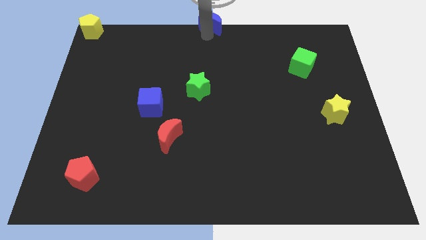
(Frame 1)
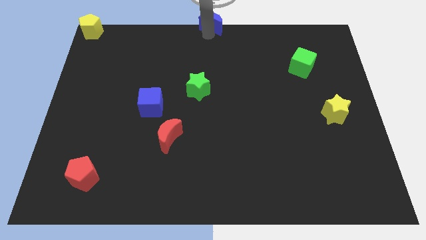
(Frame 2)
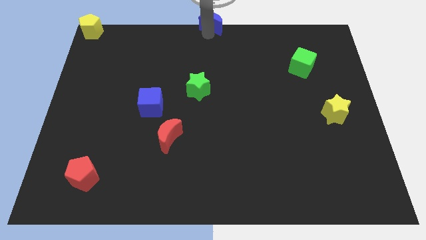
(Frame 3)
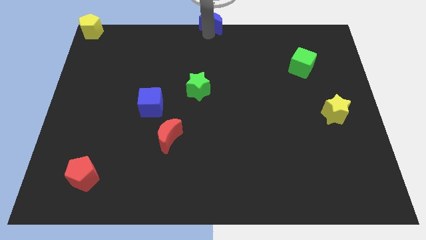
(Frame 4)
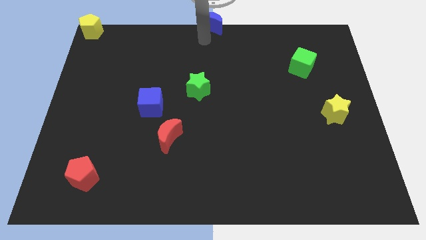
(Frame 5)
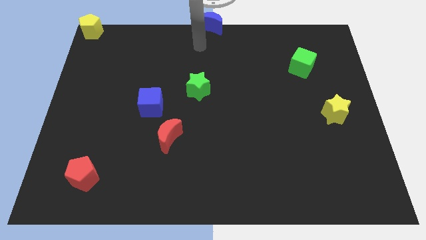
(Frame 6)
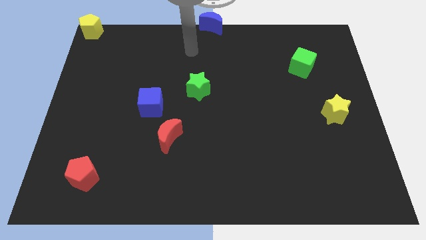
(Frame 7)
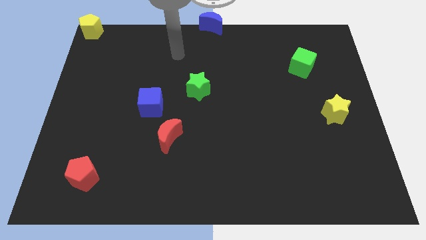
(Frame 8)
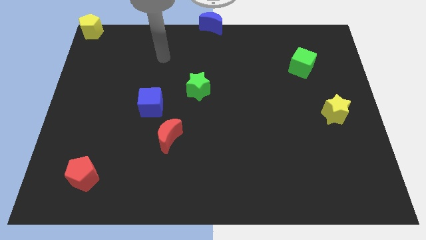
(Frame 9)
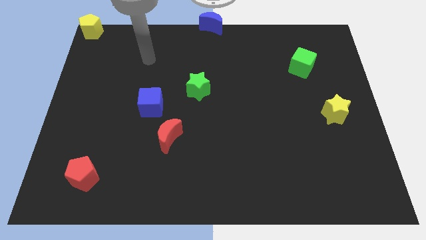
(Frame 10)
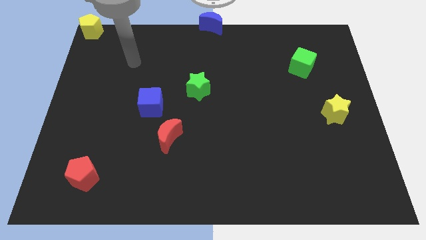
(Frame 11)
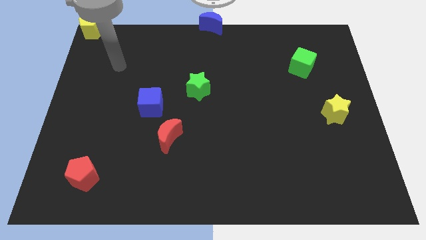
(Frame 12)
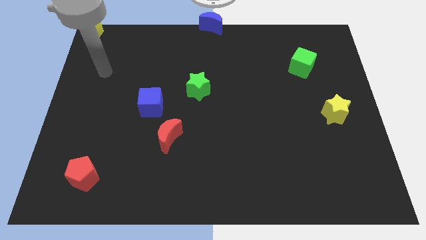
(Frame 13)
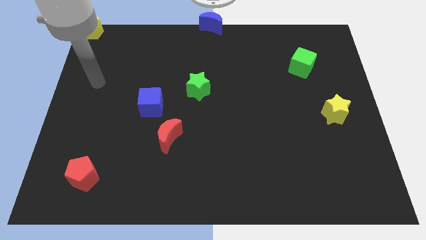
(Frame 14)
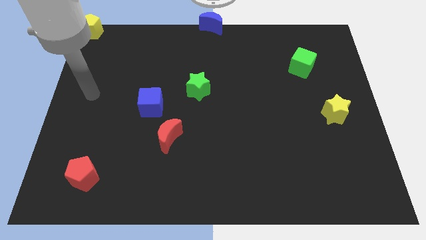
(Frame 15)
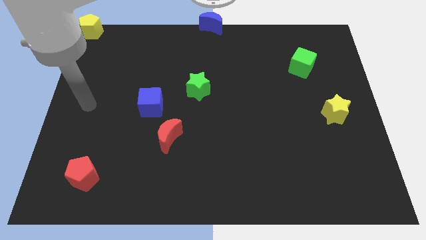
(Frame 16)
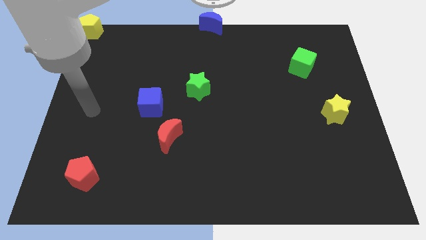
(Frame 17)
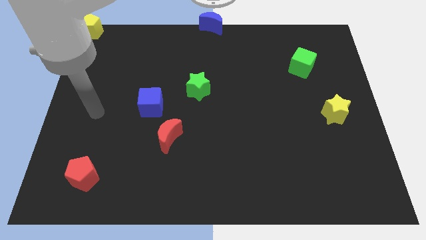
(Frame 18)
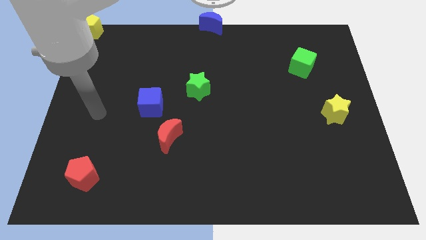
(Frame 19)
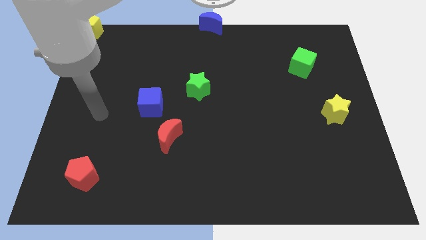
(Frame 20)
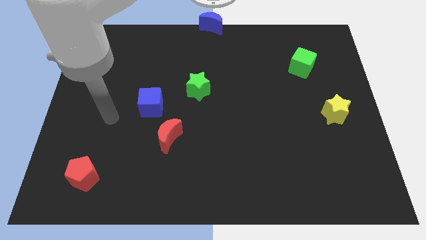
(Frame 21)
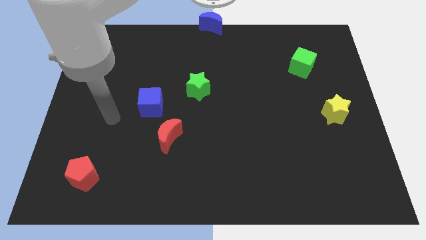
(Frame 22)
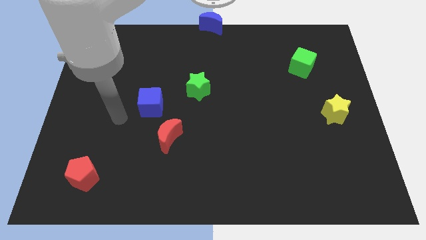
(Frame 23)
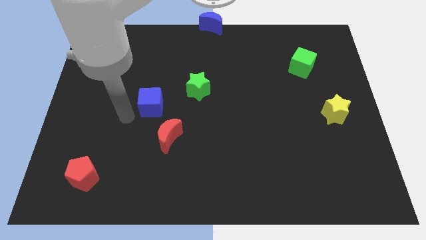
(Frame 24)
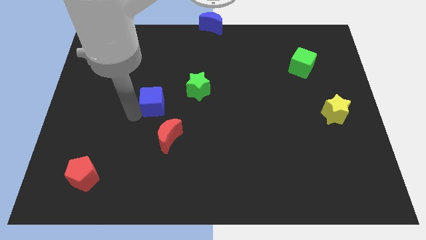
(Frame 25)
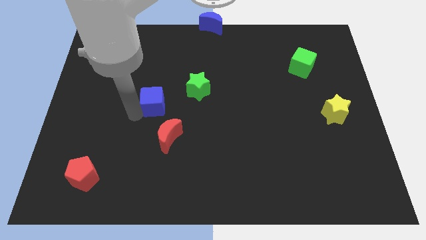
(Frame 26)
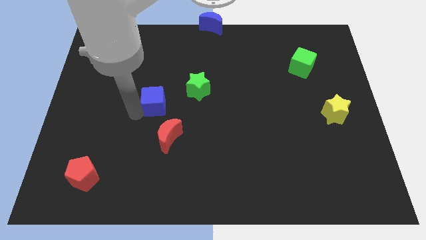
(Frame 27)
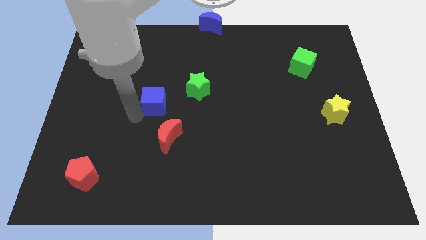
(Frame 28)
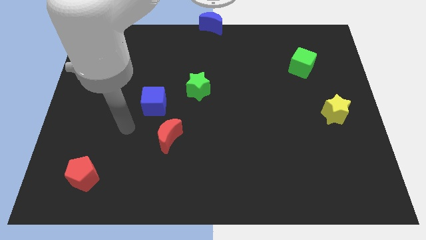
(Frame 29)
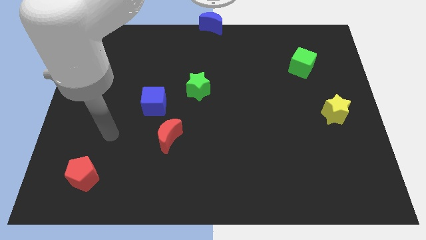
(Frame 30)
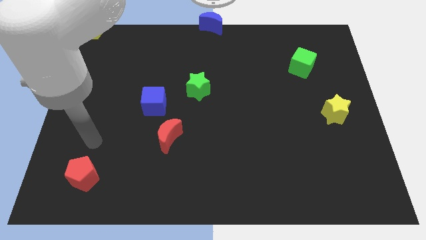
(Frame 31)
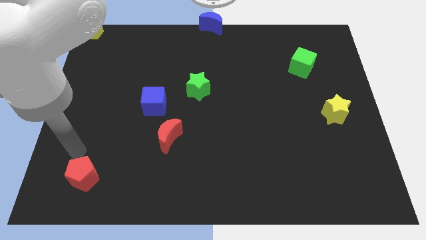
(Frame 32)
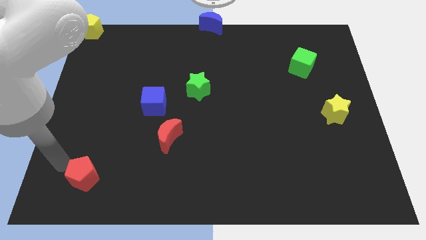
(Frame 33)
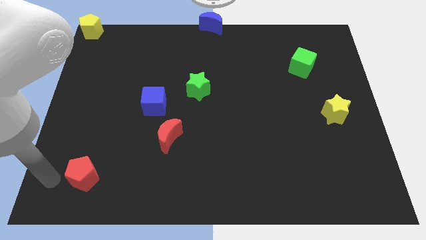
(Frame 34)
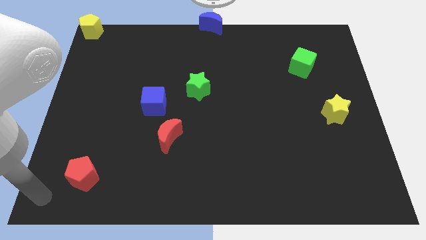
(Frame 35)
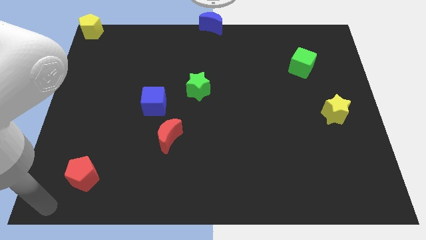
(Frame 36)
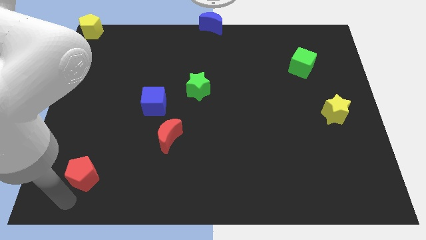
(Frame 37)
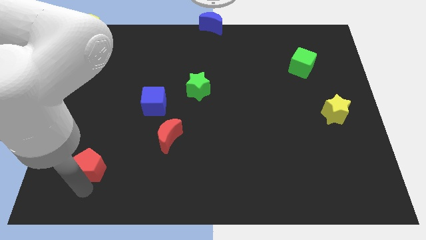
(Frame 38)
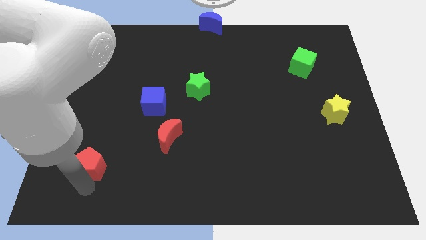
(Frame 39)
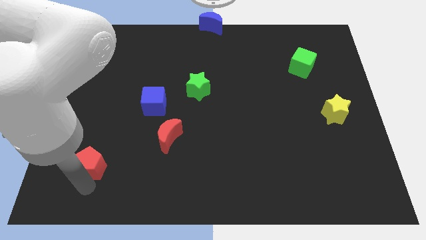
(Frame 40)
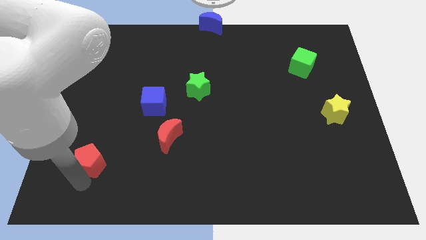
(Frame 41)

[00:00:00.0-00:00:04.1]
push the red pentagon slightly up

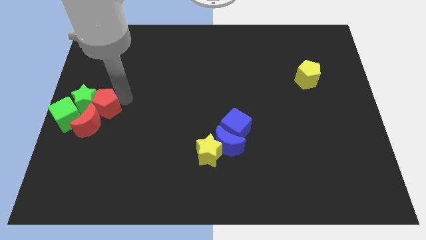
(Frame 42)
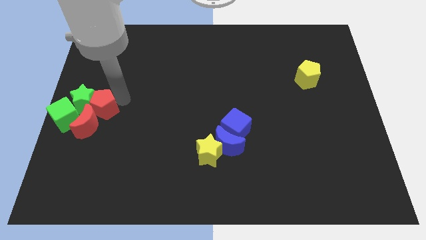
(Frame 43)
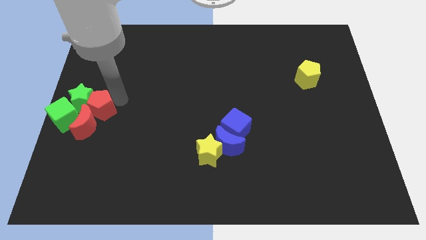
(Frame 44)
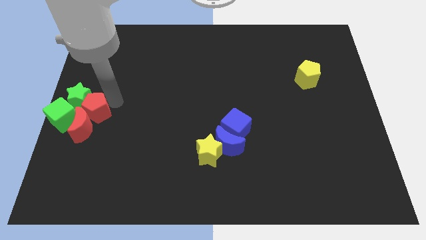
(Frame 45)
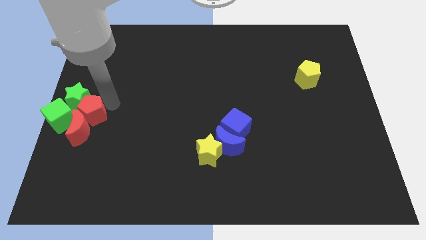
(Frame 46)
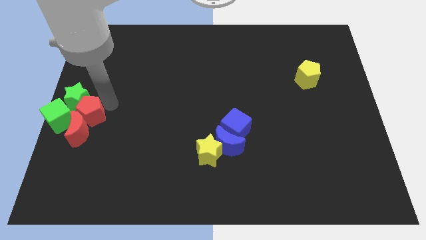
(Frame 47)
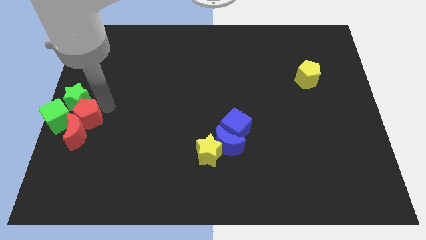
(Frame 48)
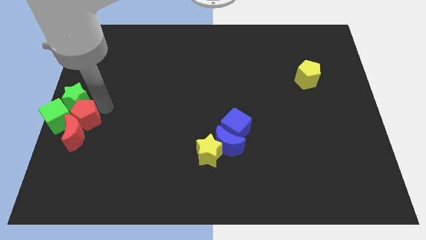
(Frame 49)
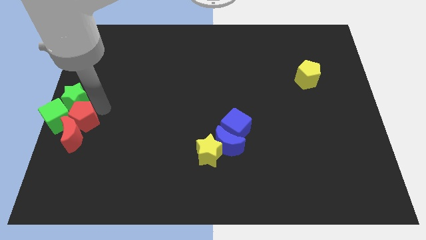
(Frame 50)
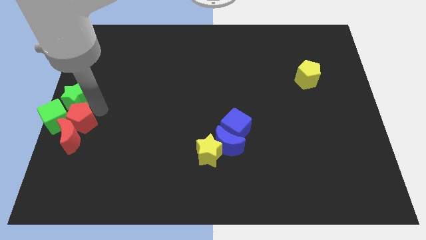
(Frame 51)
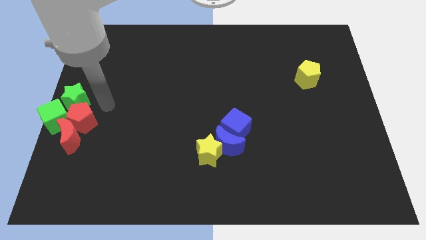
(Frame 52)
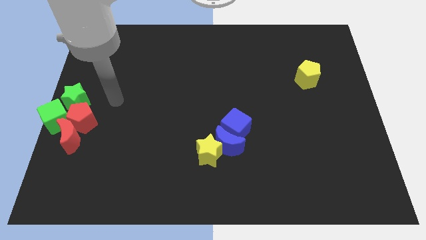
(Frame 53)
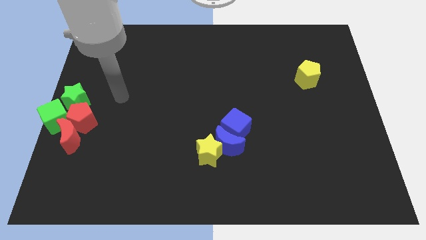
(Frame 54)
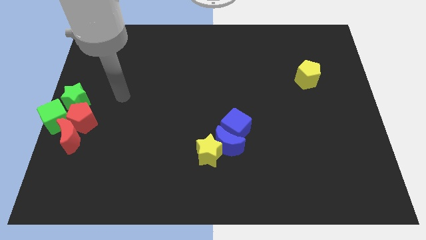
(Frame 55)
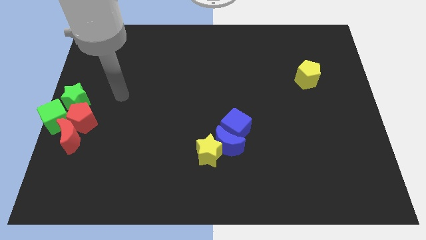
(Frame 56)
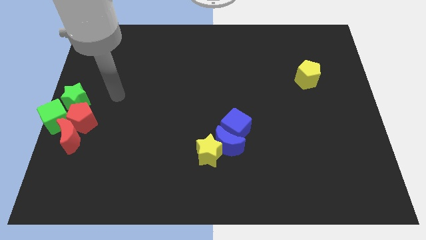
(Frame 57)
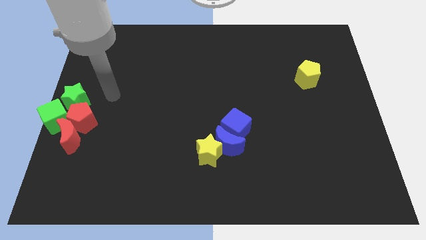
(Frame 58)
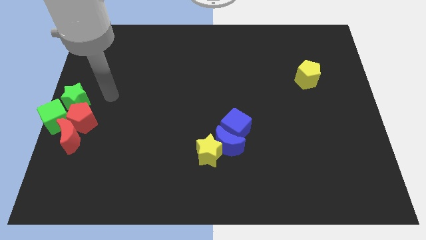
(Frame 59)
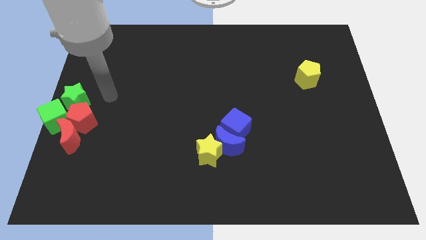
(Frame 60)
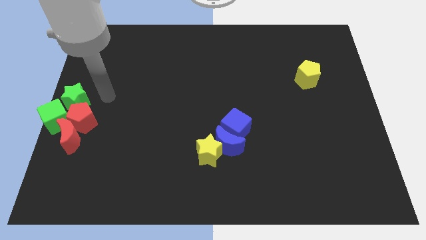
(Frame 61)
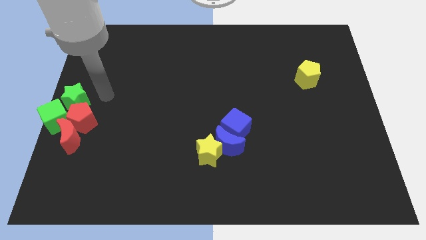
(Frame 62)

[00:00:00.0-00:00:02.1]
push red pentagon close to the green cube

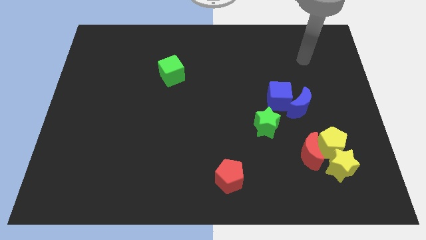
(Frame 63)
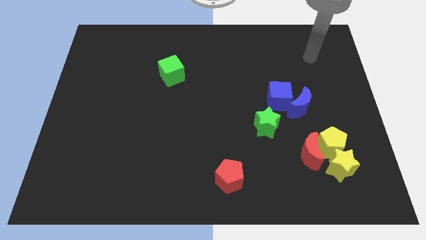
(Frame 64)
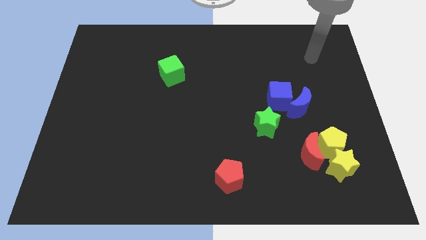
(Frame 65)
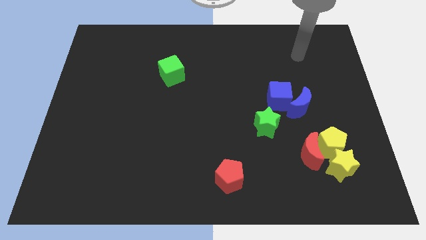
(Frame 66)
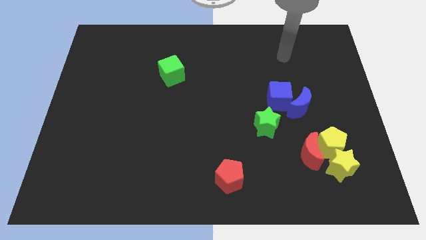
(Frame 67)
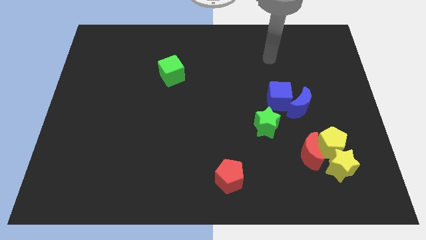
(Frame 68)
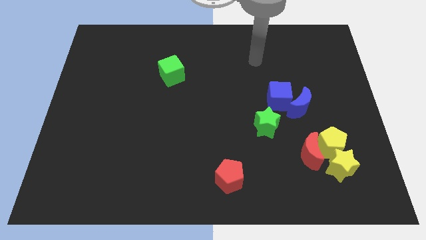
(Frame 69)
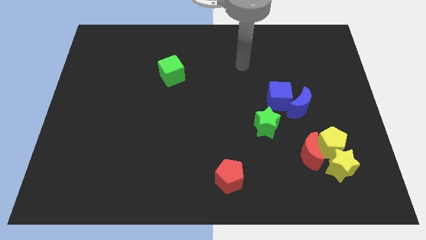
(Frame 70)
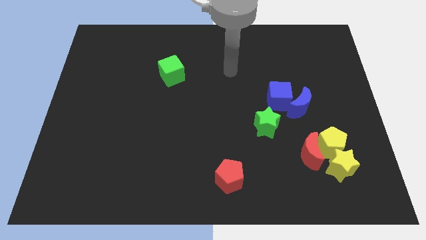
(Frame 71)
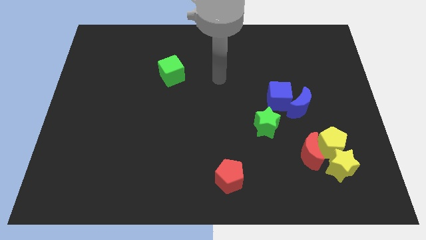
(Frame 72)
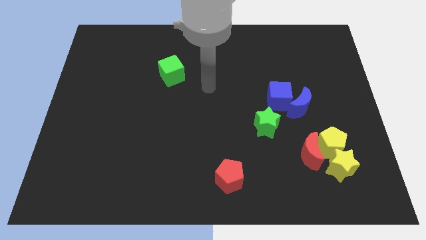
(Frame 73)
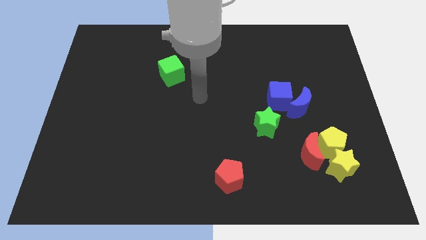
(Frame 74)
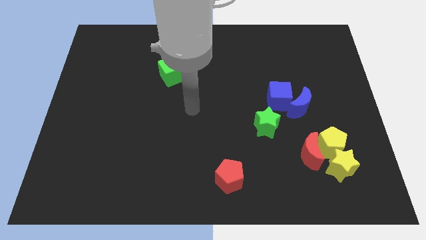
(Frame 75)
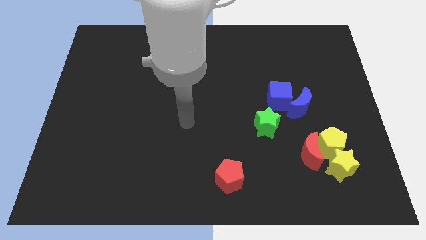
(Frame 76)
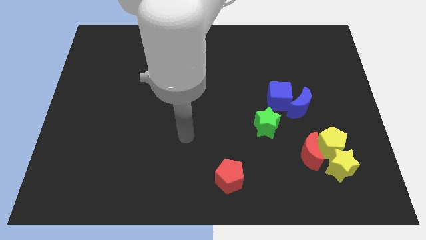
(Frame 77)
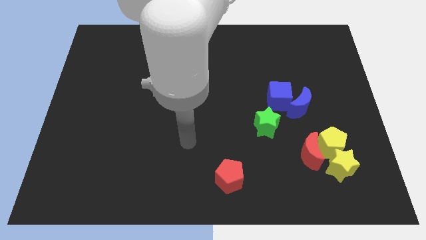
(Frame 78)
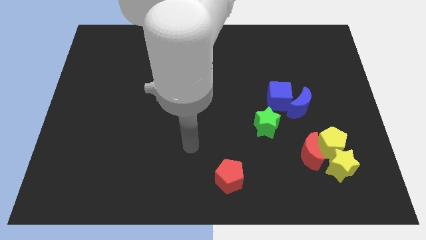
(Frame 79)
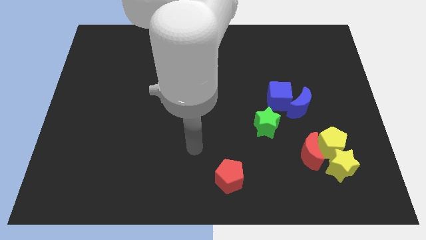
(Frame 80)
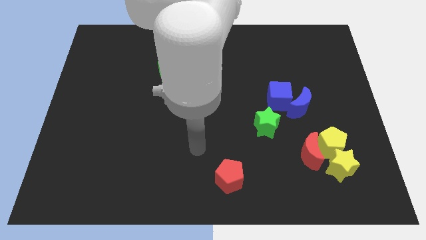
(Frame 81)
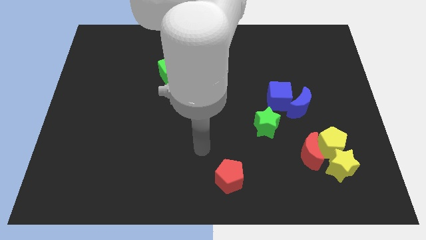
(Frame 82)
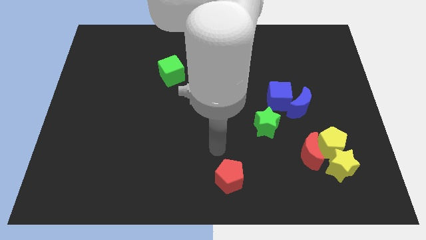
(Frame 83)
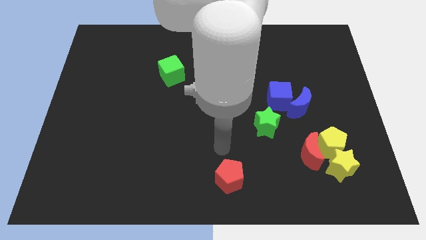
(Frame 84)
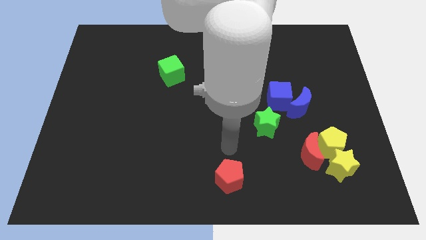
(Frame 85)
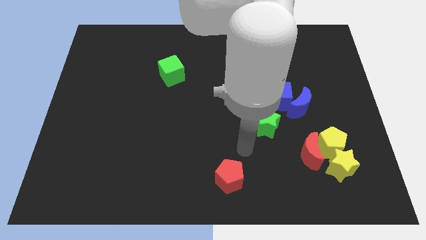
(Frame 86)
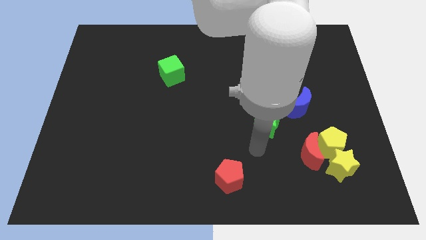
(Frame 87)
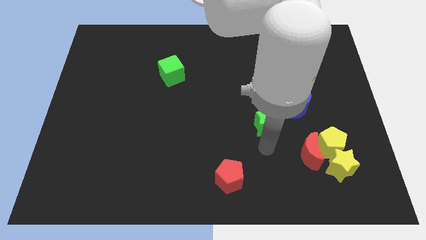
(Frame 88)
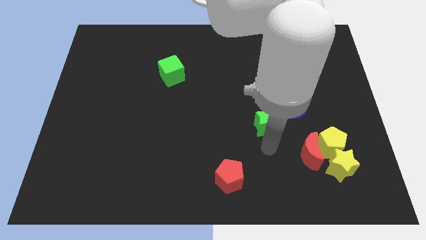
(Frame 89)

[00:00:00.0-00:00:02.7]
place the arm below the green star
